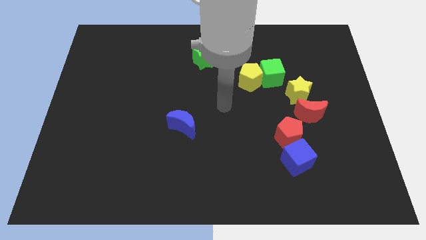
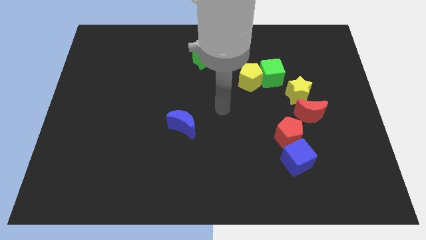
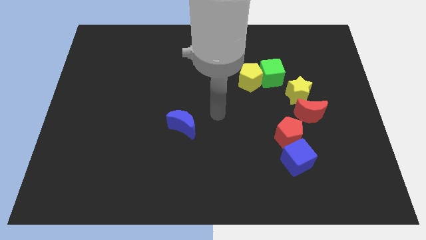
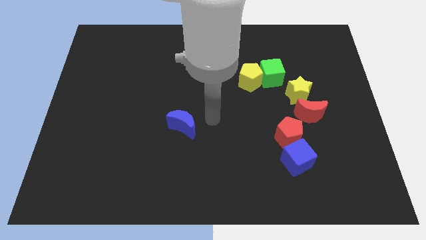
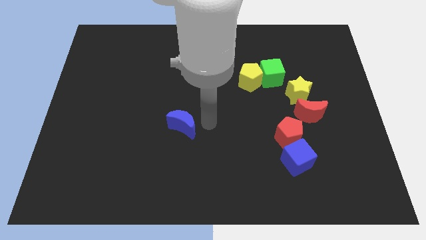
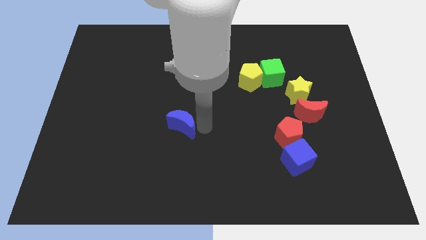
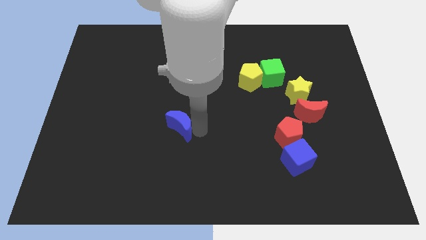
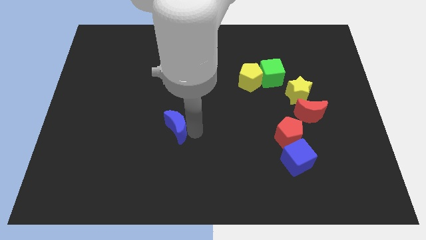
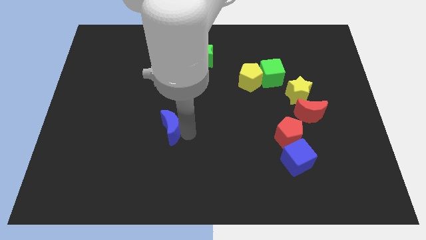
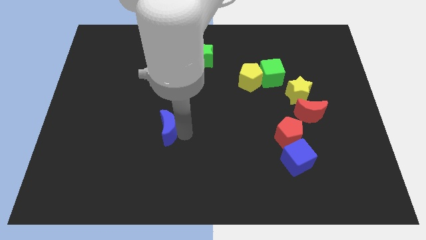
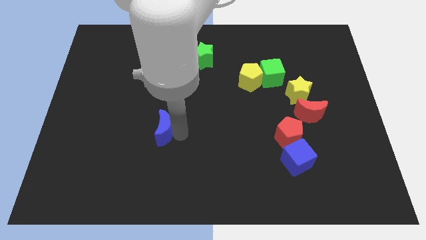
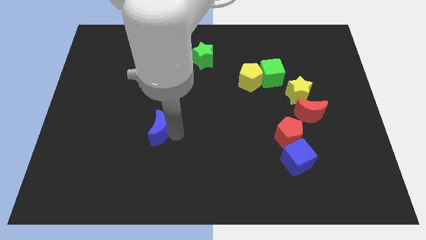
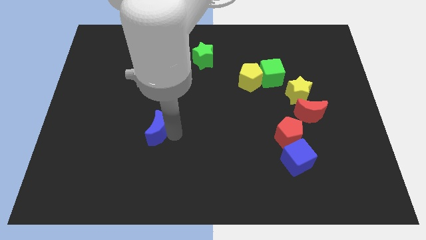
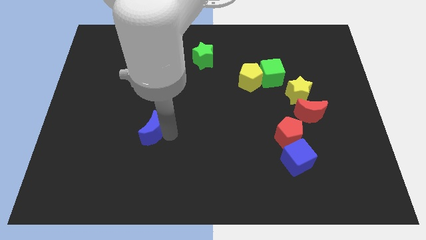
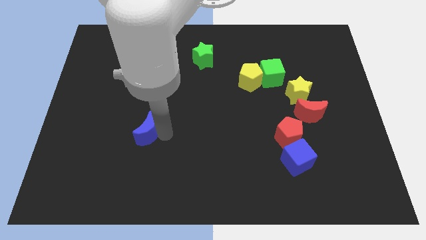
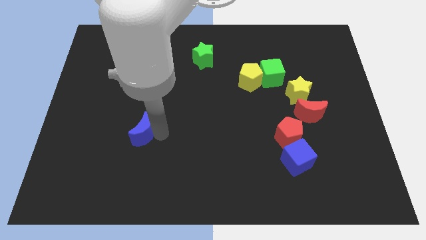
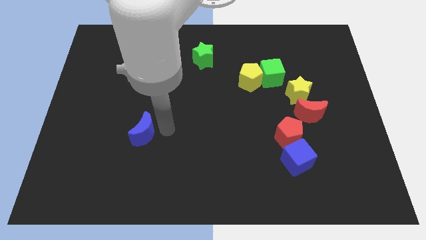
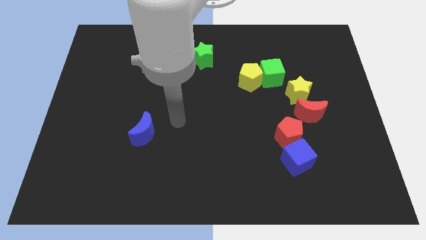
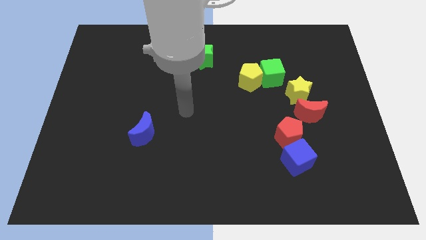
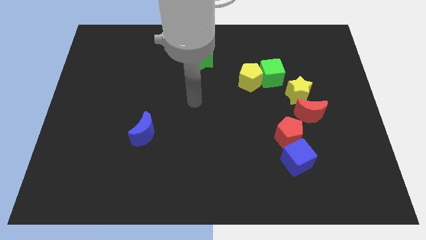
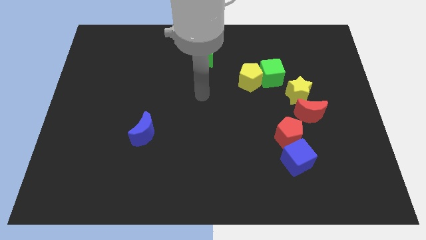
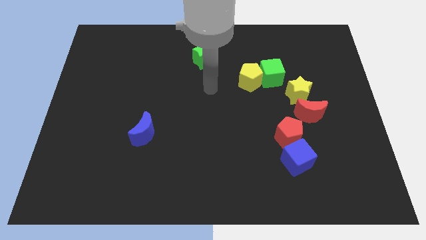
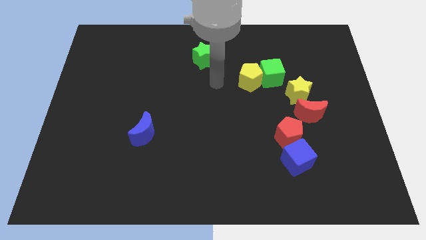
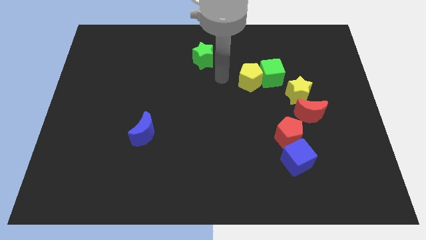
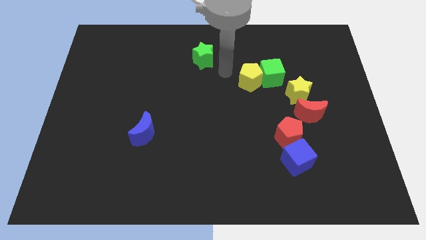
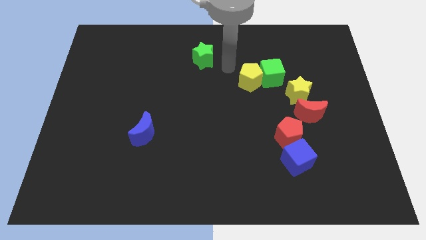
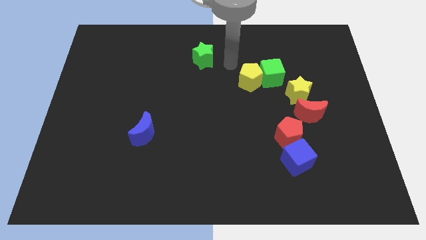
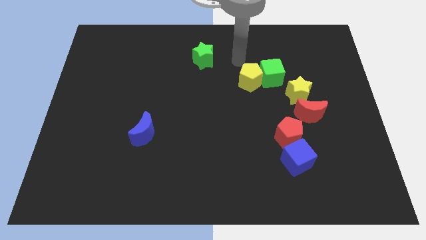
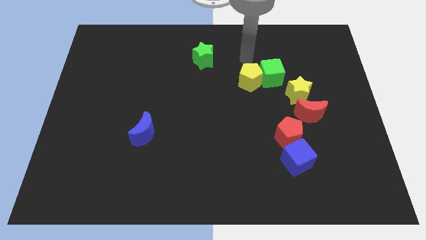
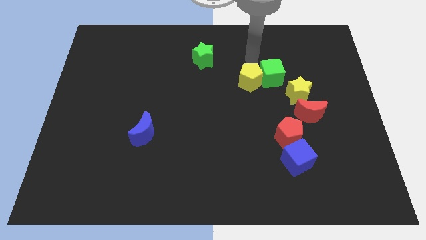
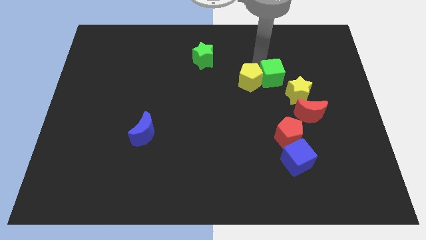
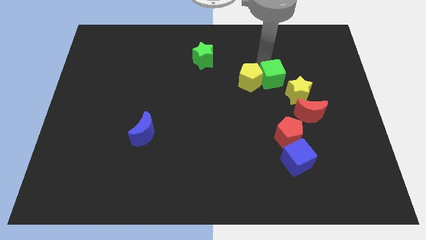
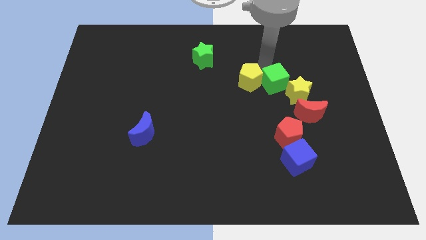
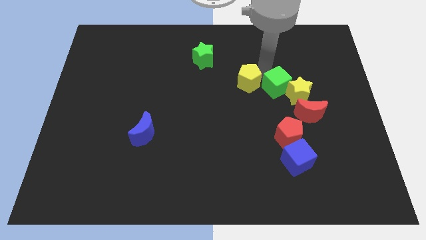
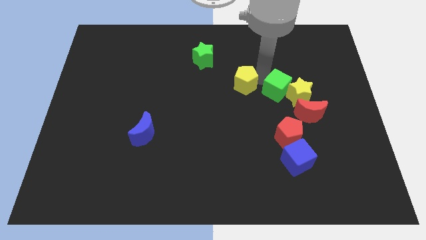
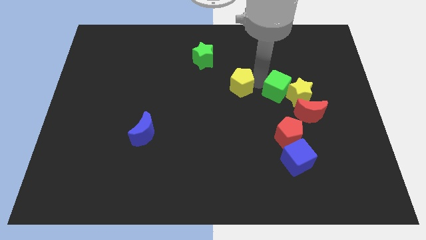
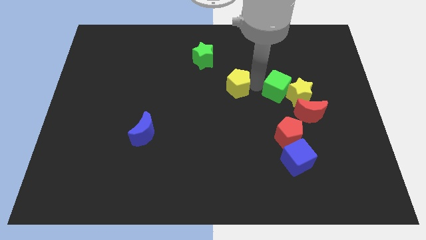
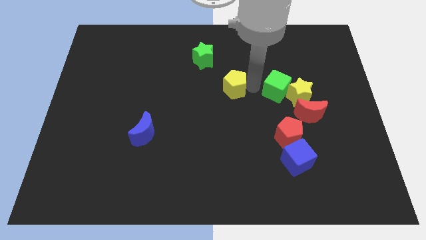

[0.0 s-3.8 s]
separate yellow pentagon from green cube

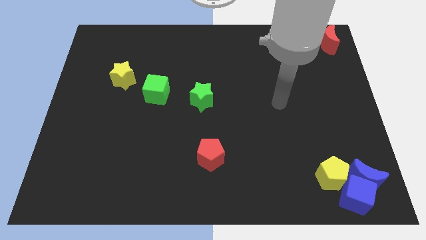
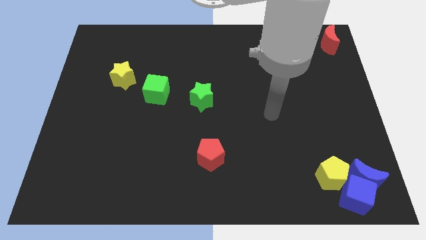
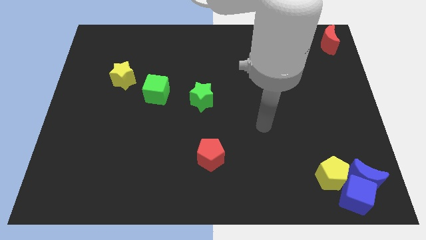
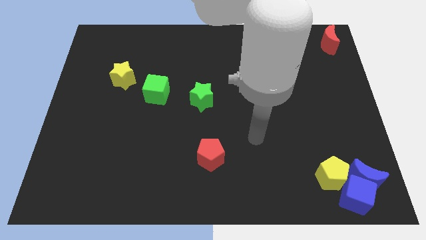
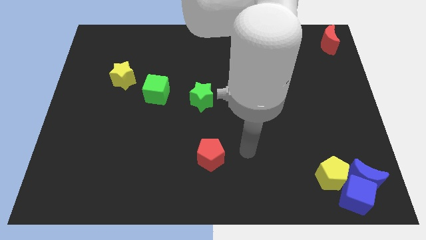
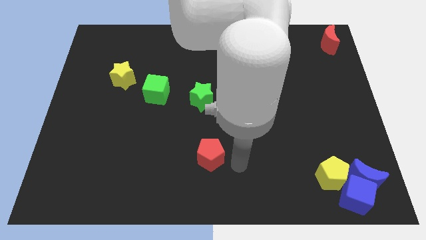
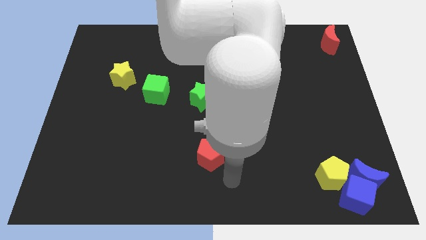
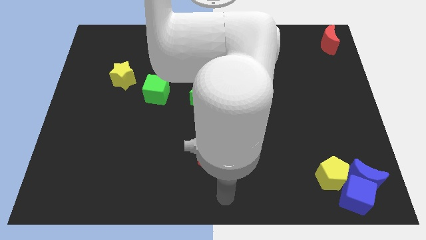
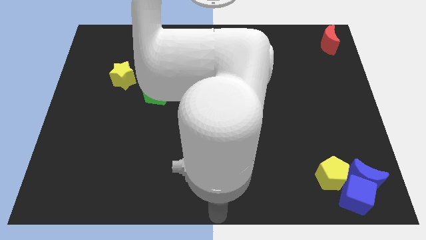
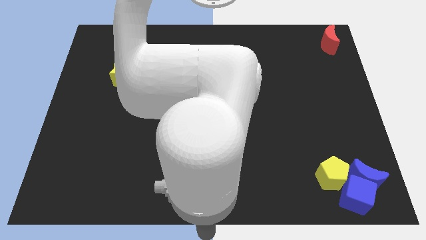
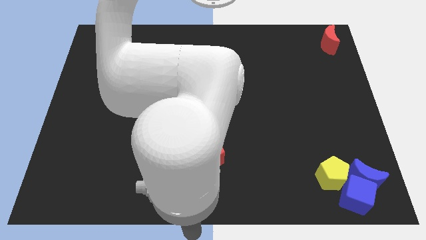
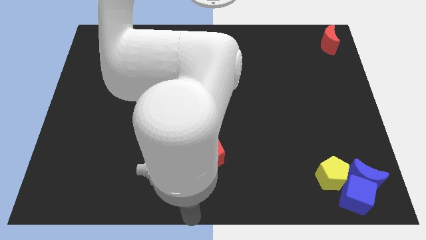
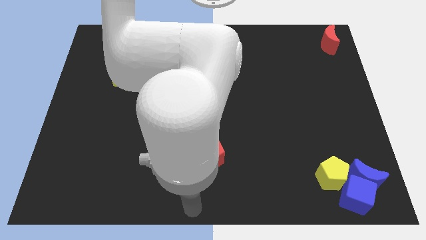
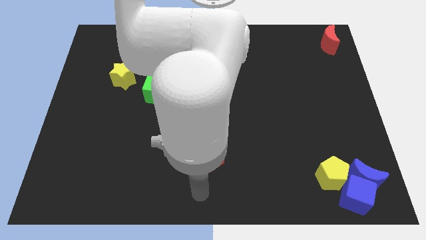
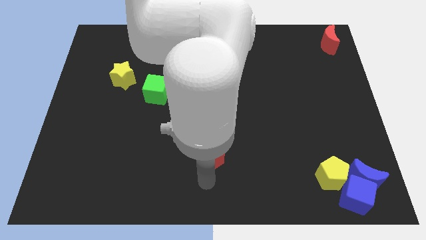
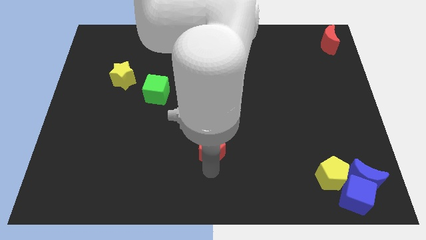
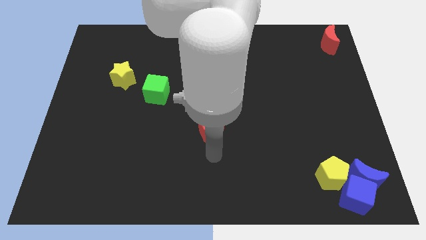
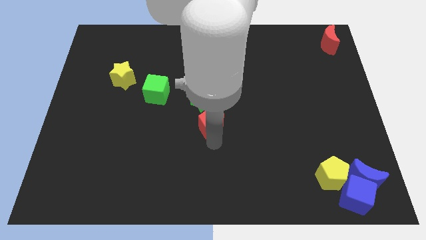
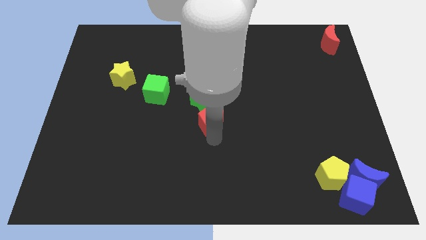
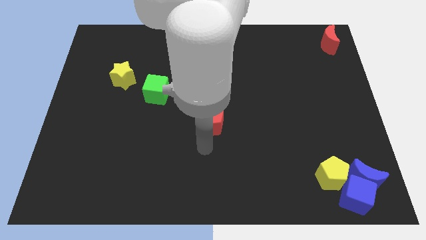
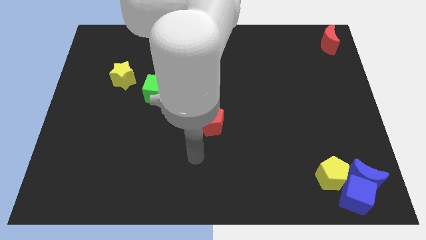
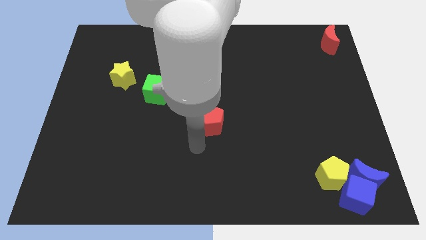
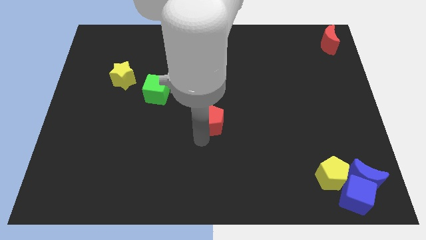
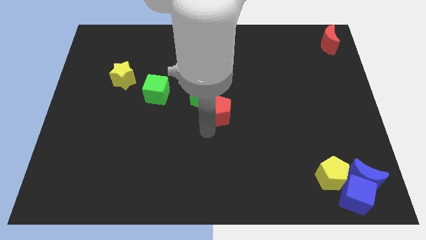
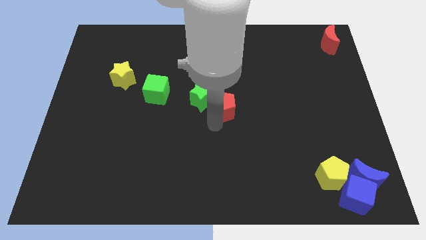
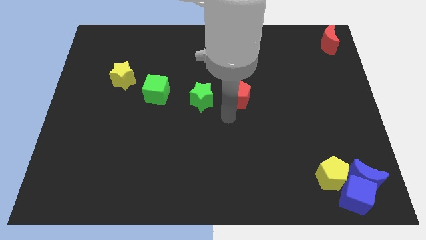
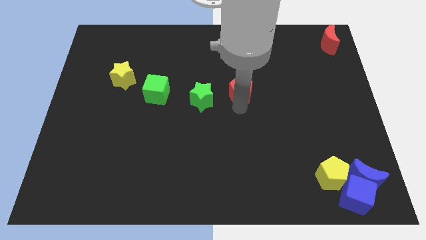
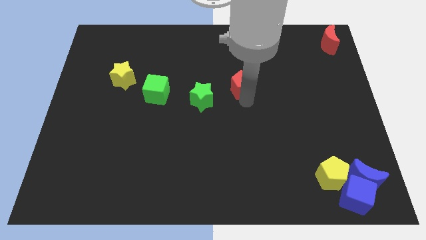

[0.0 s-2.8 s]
place red pentagon at center

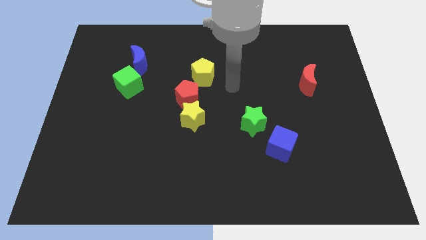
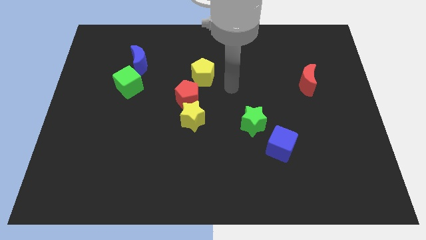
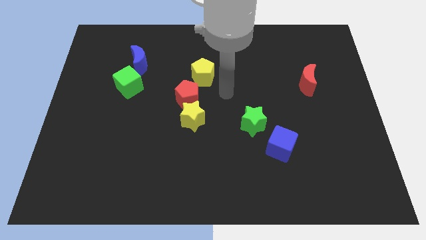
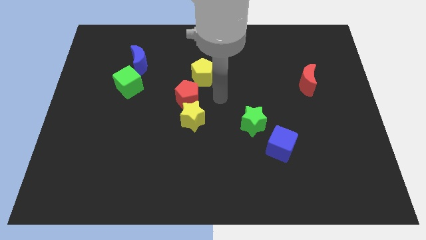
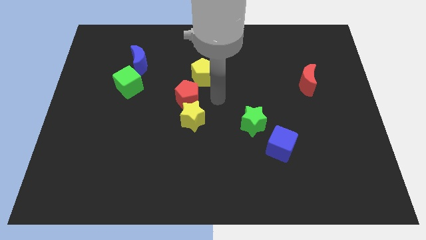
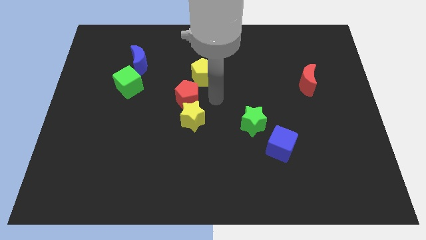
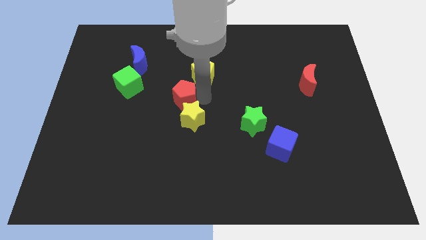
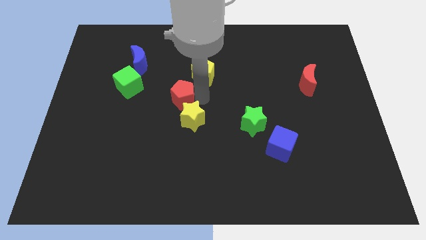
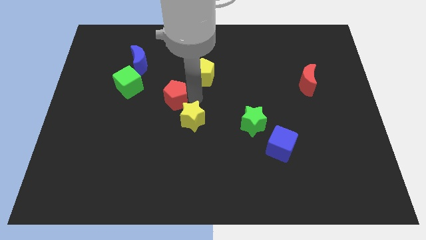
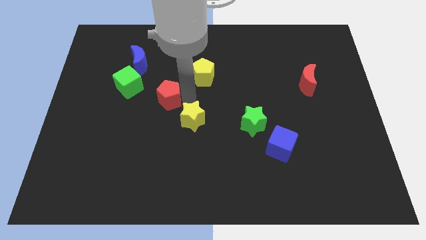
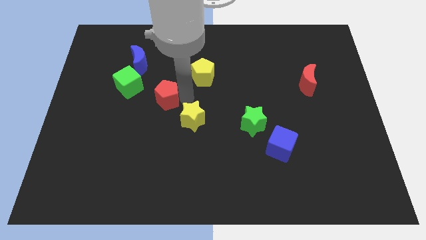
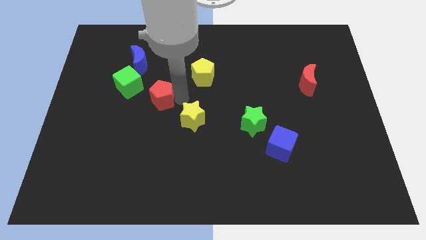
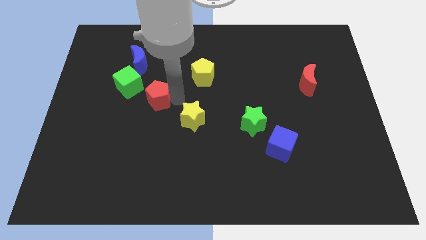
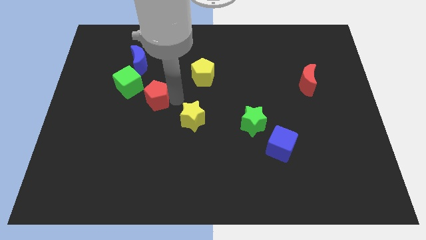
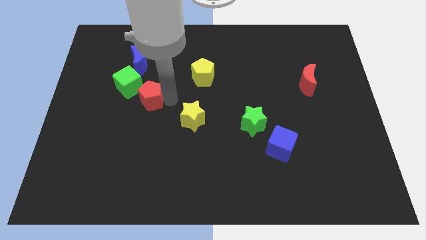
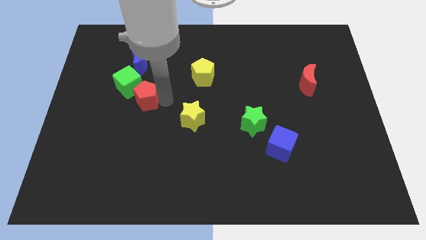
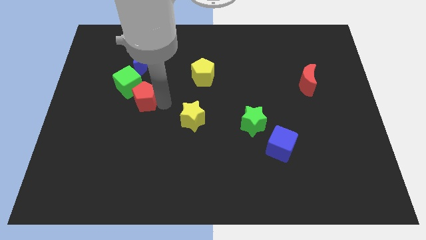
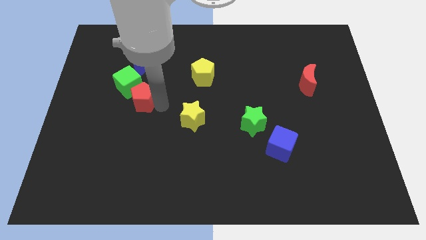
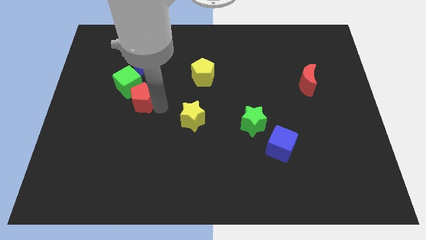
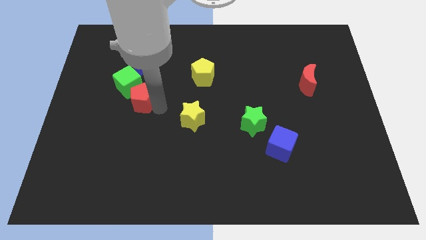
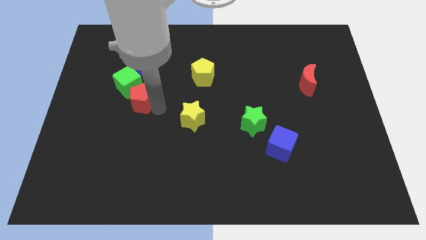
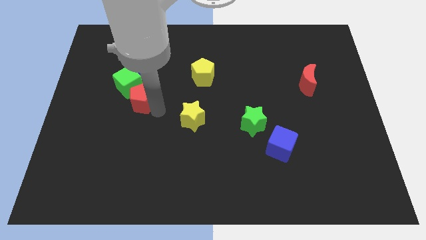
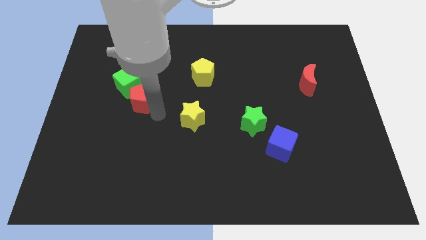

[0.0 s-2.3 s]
move the red pentagon close to the green cube
